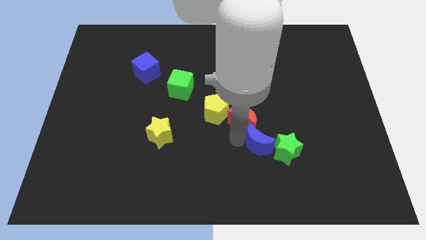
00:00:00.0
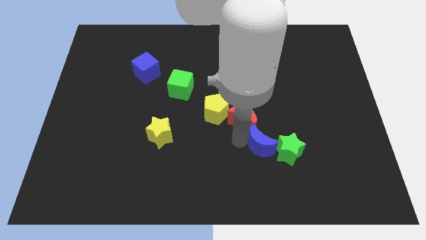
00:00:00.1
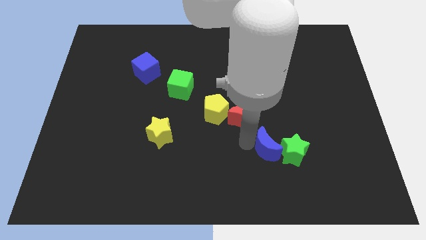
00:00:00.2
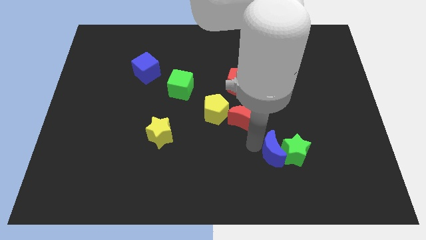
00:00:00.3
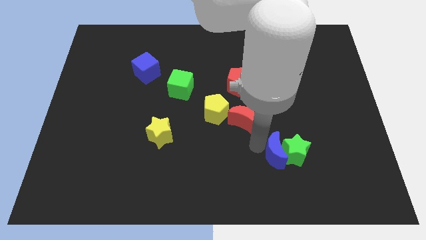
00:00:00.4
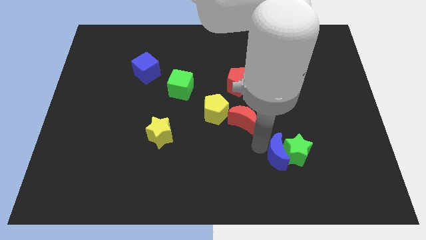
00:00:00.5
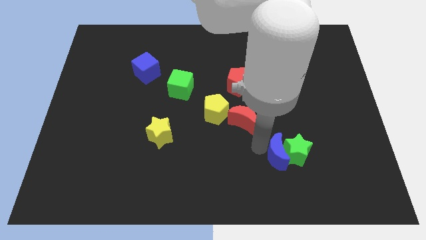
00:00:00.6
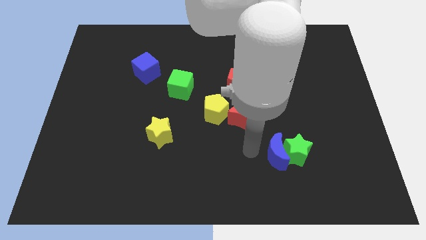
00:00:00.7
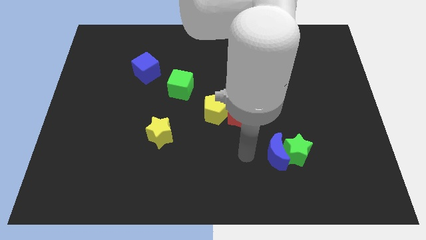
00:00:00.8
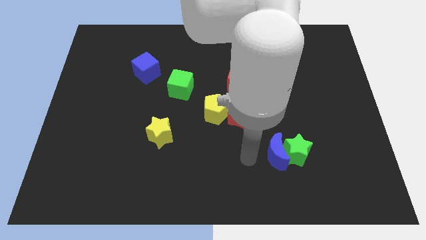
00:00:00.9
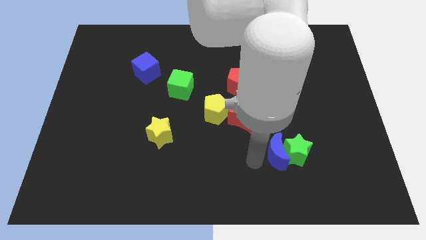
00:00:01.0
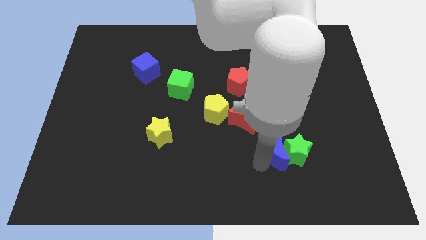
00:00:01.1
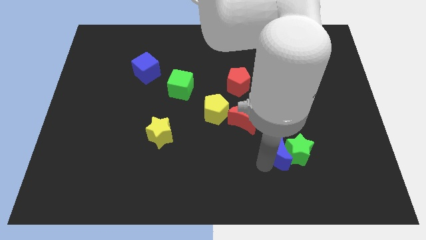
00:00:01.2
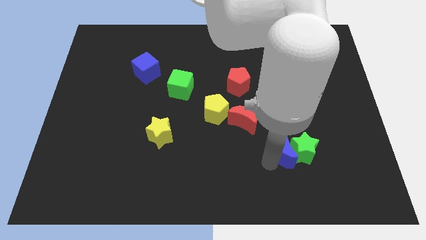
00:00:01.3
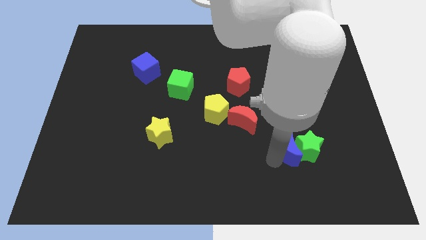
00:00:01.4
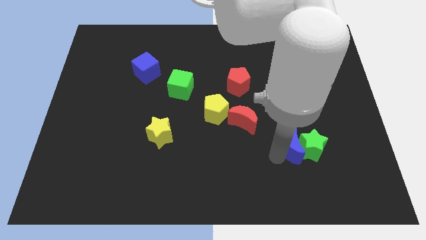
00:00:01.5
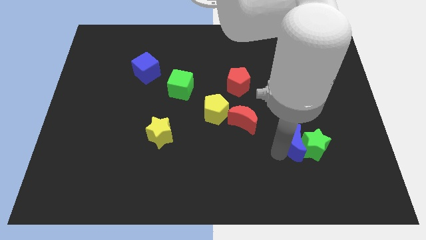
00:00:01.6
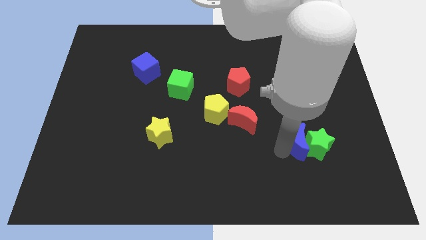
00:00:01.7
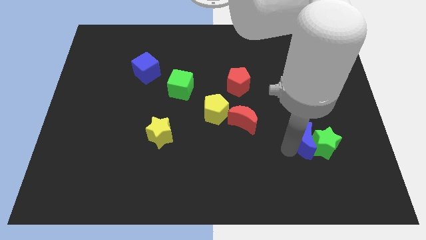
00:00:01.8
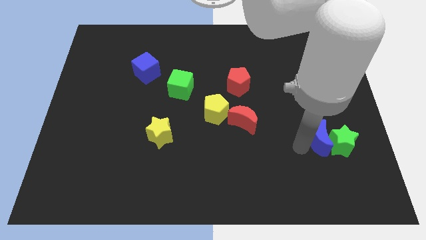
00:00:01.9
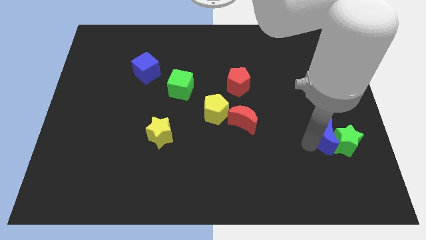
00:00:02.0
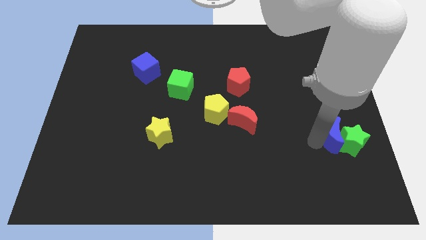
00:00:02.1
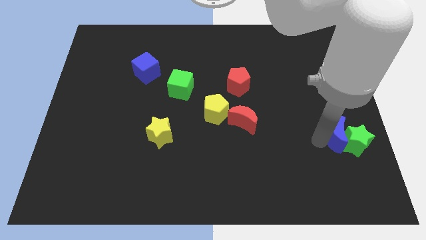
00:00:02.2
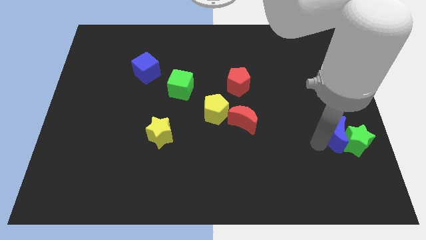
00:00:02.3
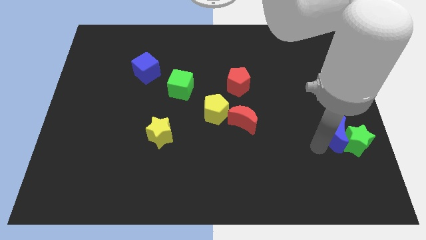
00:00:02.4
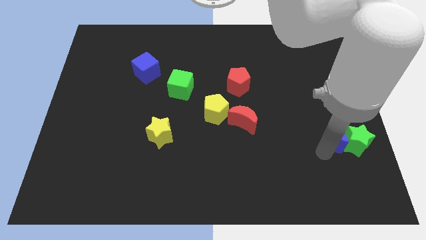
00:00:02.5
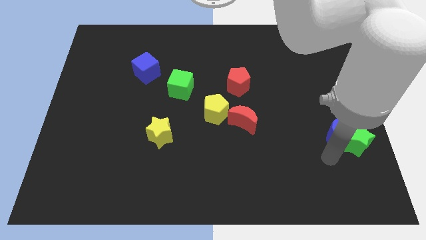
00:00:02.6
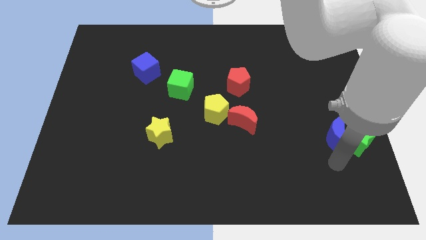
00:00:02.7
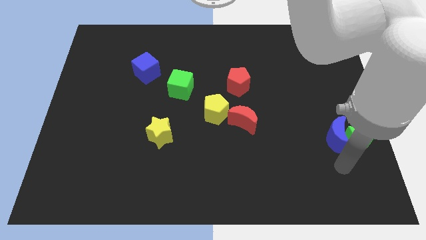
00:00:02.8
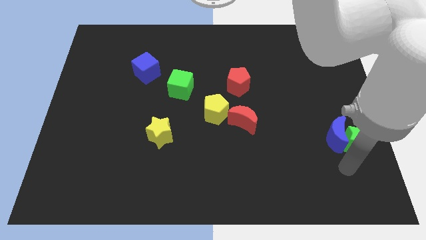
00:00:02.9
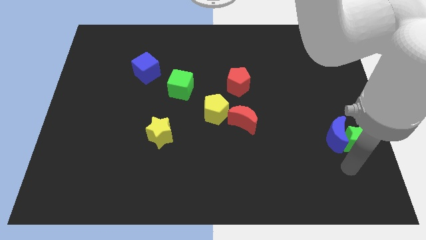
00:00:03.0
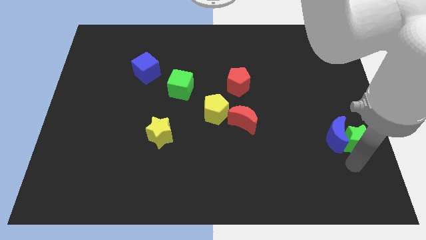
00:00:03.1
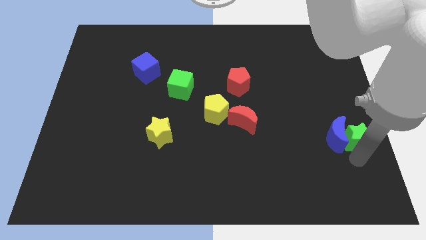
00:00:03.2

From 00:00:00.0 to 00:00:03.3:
move the blue crescent and the green star to the right of the board

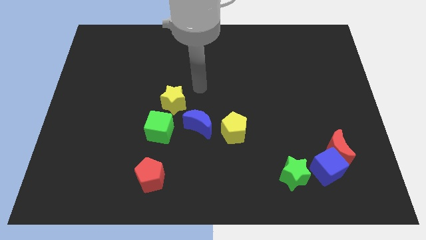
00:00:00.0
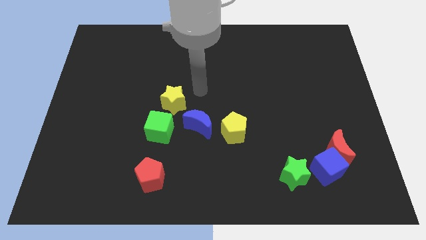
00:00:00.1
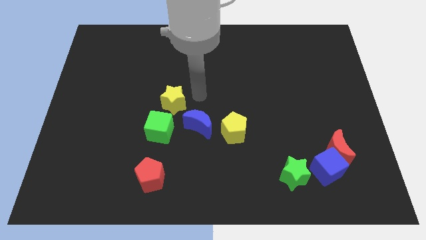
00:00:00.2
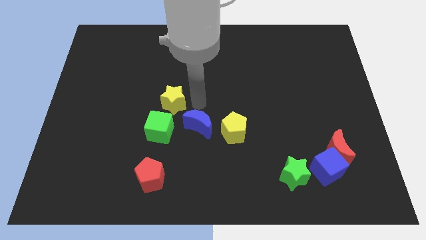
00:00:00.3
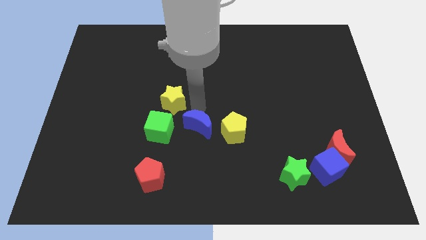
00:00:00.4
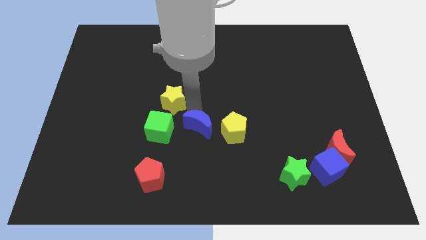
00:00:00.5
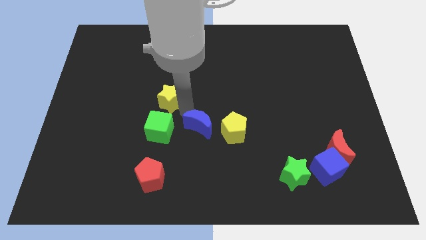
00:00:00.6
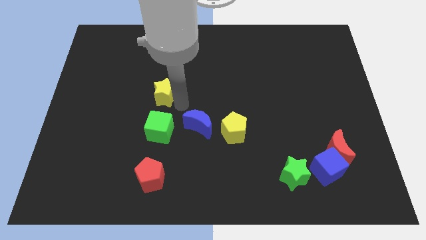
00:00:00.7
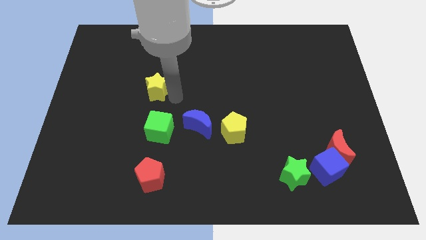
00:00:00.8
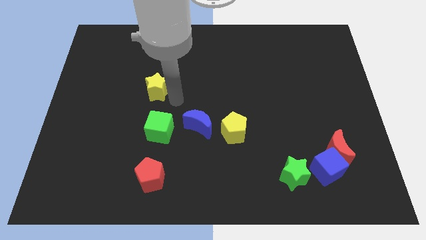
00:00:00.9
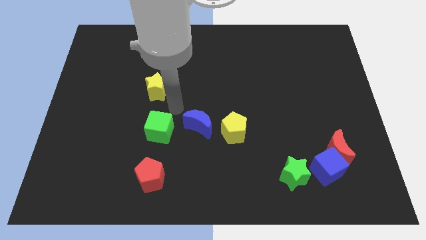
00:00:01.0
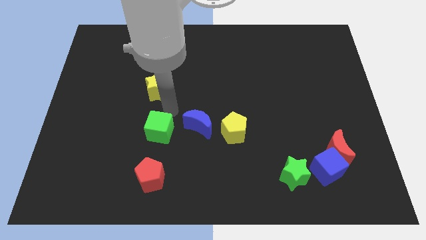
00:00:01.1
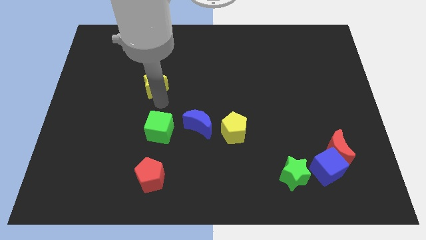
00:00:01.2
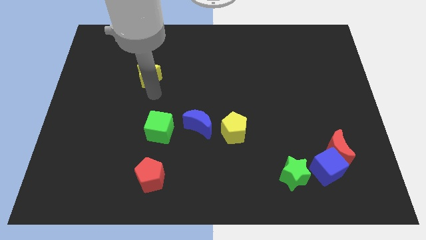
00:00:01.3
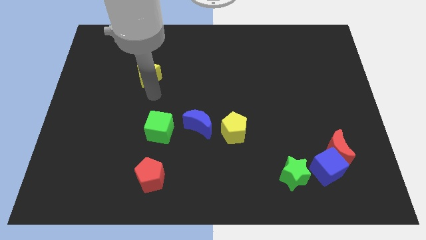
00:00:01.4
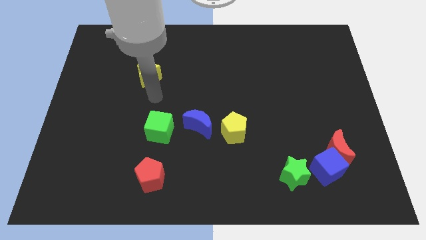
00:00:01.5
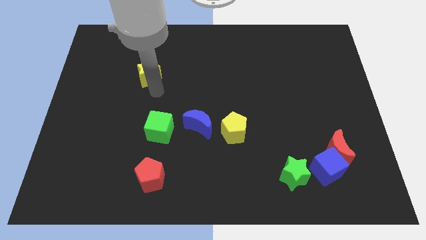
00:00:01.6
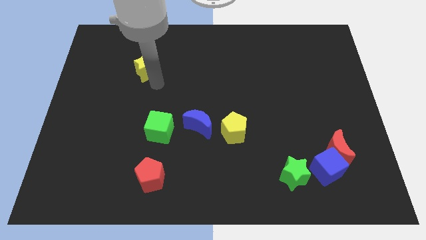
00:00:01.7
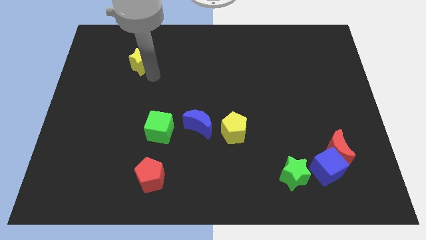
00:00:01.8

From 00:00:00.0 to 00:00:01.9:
push the yellow star slightly upwards

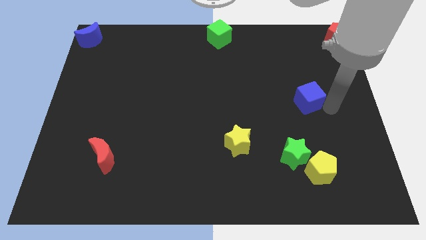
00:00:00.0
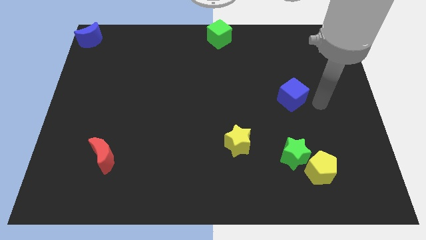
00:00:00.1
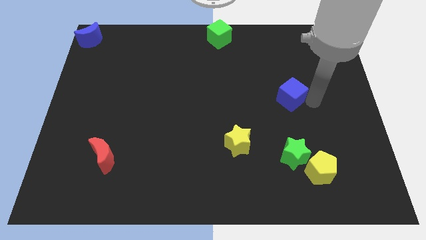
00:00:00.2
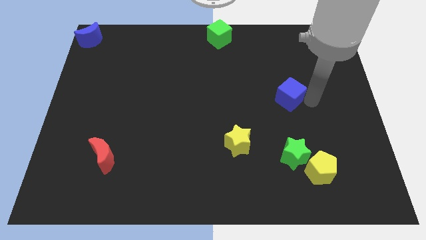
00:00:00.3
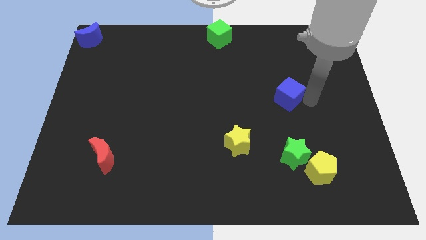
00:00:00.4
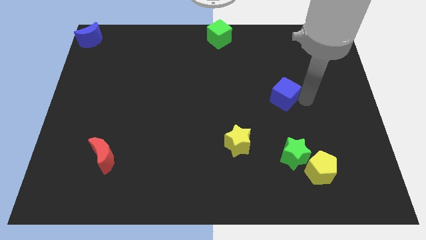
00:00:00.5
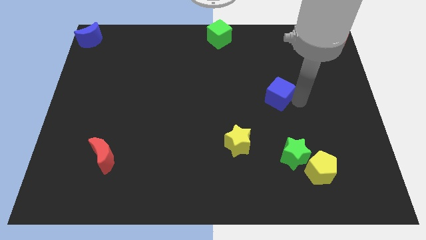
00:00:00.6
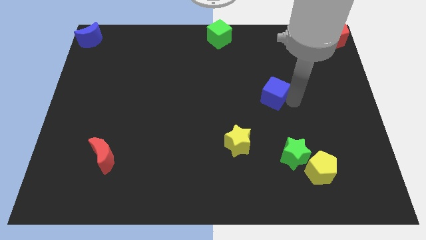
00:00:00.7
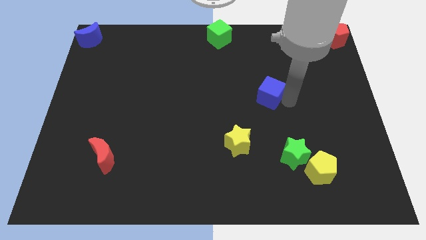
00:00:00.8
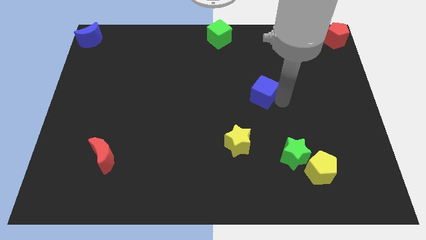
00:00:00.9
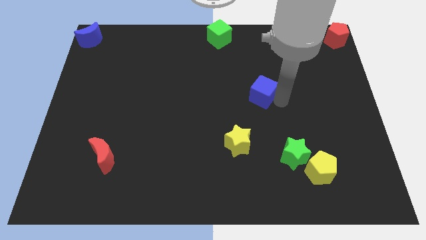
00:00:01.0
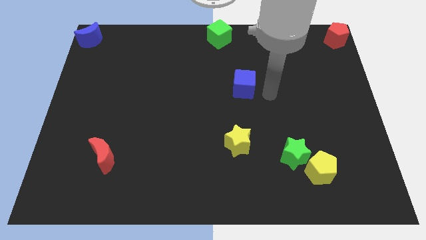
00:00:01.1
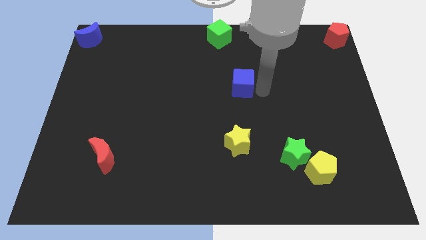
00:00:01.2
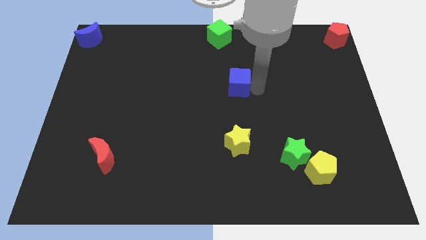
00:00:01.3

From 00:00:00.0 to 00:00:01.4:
push the blue cube vertically above the yellow star

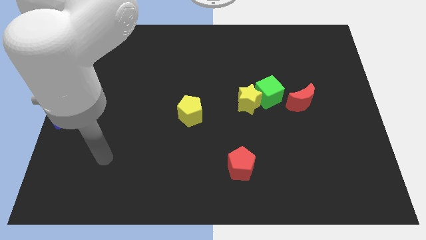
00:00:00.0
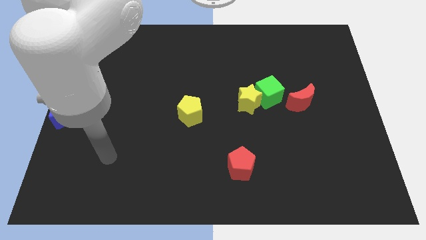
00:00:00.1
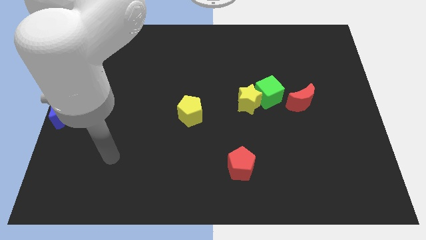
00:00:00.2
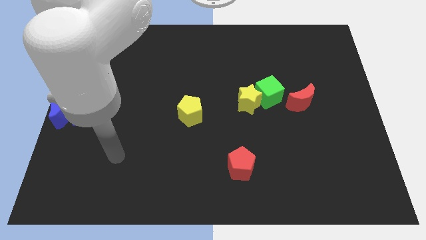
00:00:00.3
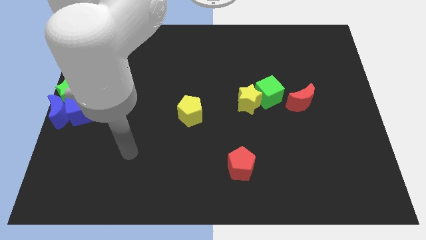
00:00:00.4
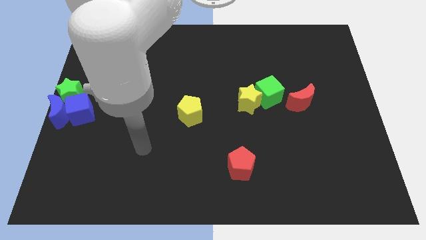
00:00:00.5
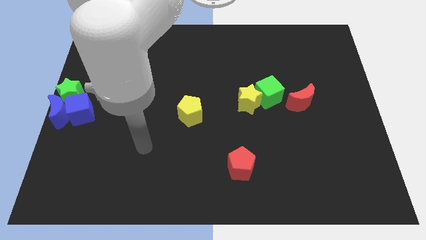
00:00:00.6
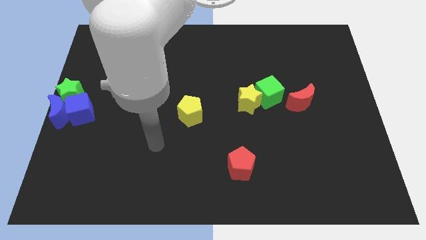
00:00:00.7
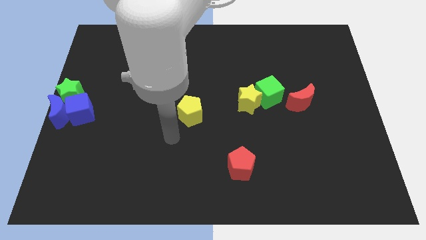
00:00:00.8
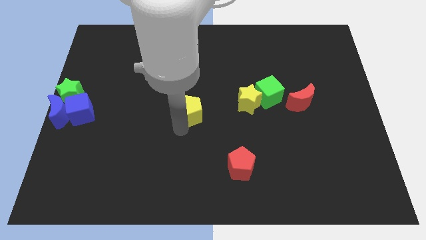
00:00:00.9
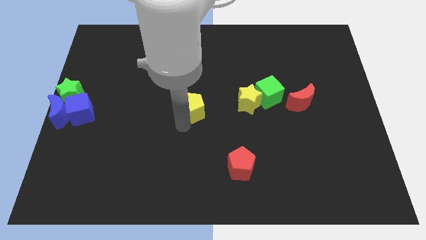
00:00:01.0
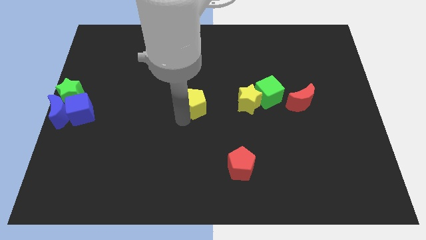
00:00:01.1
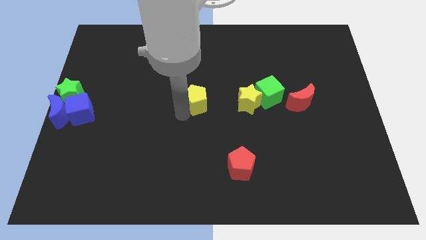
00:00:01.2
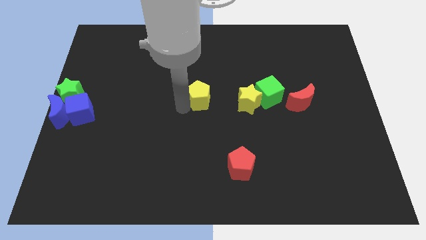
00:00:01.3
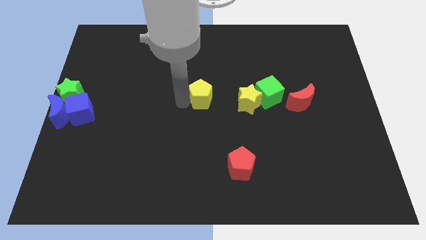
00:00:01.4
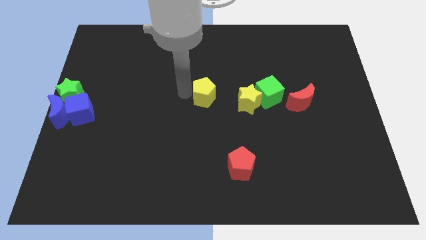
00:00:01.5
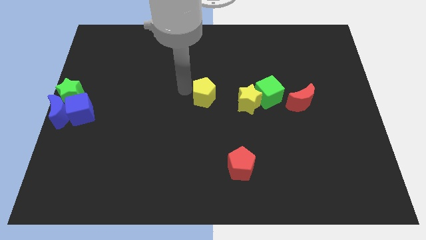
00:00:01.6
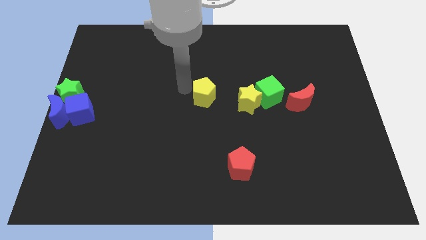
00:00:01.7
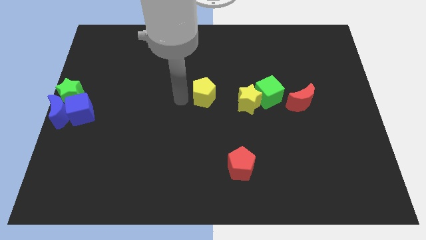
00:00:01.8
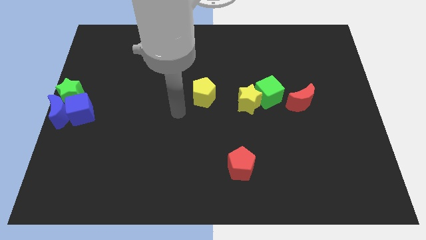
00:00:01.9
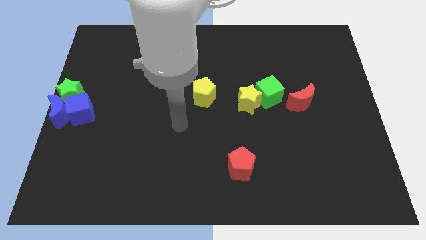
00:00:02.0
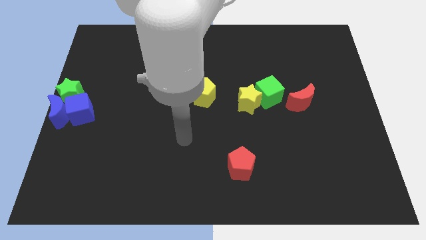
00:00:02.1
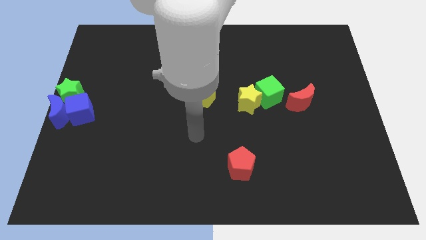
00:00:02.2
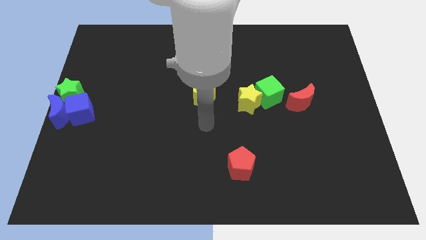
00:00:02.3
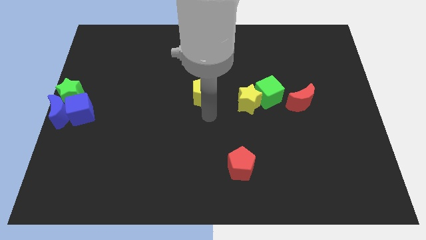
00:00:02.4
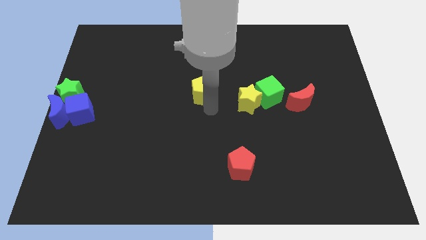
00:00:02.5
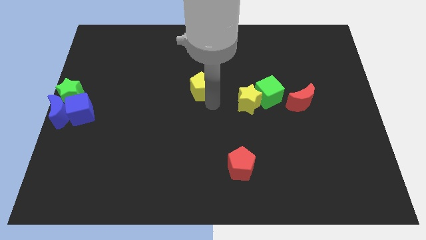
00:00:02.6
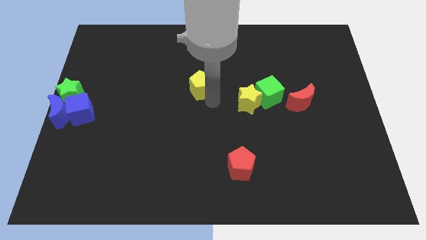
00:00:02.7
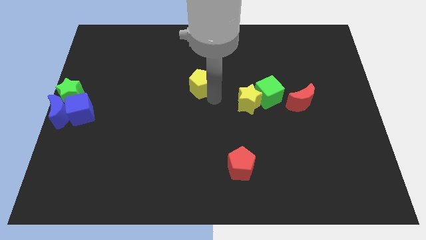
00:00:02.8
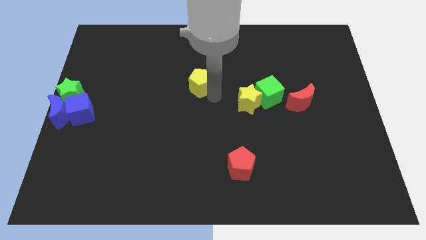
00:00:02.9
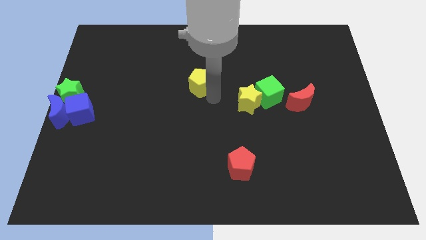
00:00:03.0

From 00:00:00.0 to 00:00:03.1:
place yellow pentagon diagonal to yellow star
